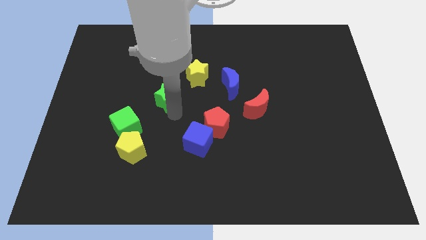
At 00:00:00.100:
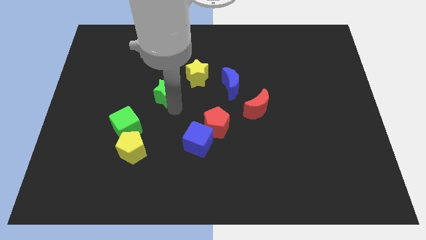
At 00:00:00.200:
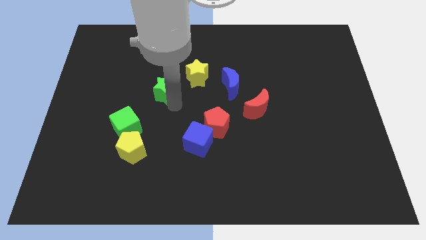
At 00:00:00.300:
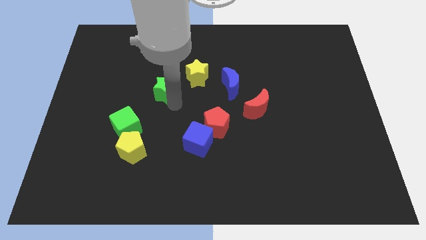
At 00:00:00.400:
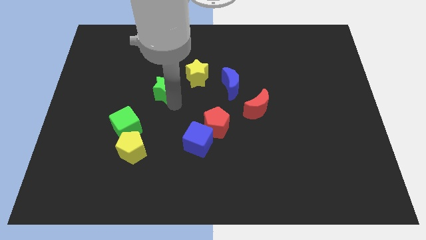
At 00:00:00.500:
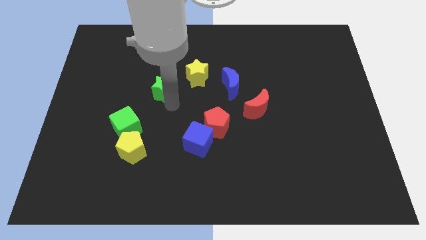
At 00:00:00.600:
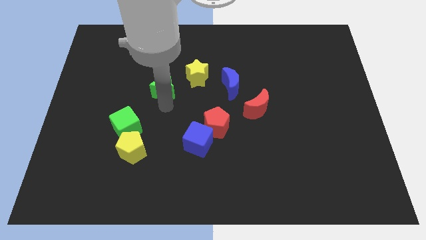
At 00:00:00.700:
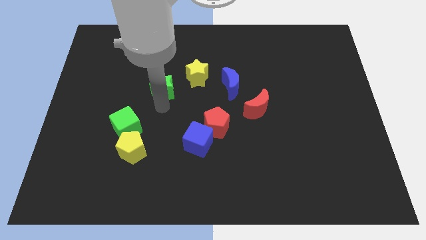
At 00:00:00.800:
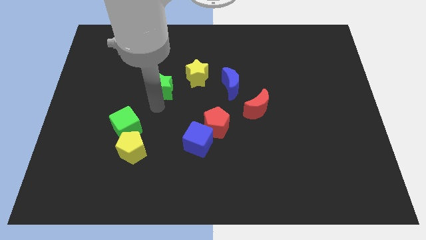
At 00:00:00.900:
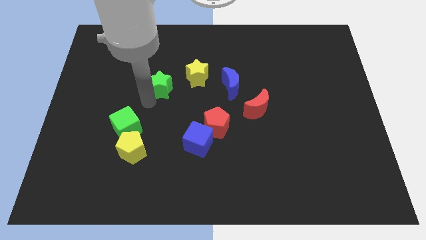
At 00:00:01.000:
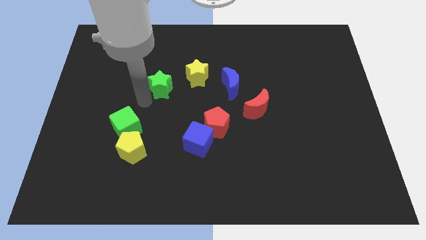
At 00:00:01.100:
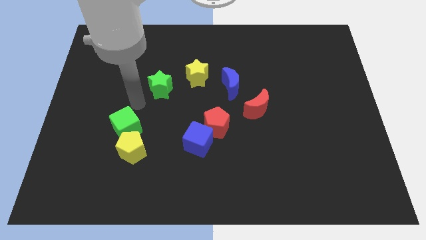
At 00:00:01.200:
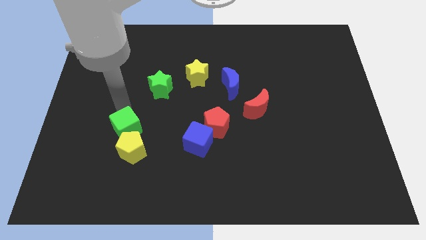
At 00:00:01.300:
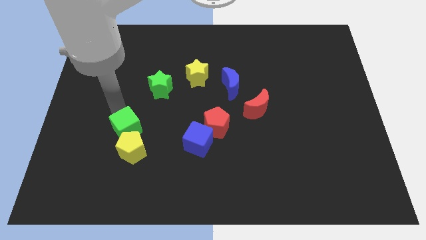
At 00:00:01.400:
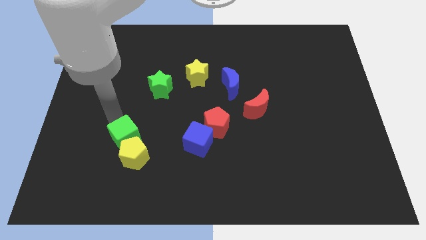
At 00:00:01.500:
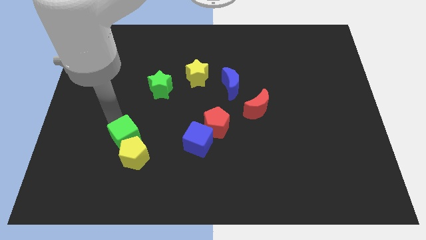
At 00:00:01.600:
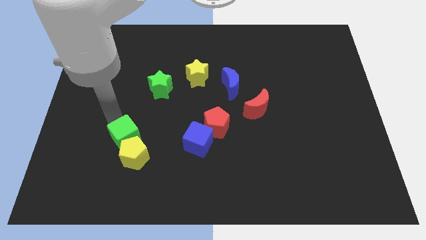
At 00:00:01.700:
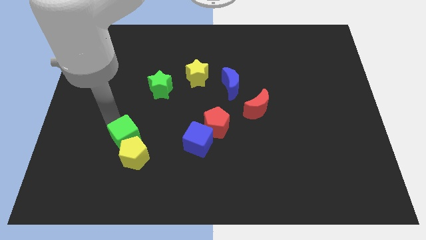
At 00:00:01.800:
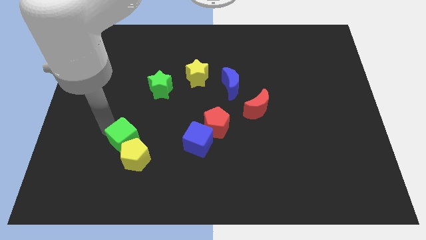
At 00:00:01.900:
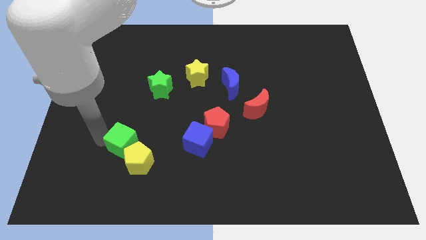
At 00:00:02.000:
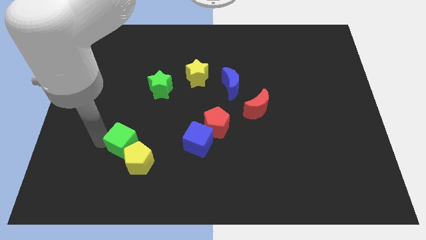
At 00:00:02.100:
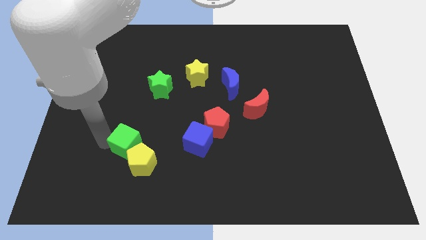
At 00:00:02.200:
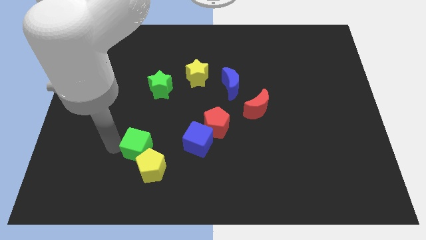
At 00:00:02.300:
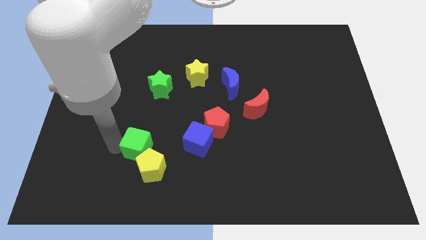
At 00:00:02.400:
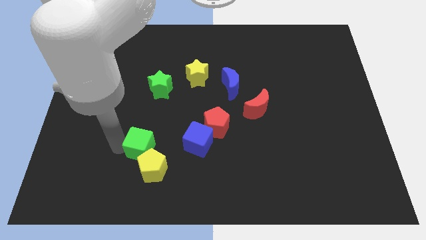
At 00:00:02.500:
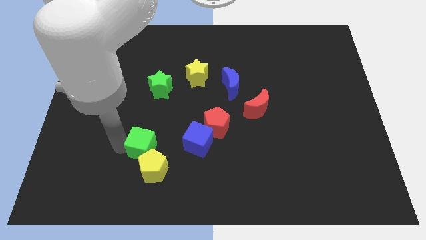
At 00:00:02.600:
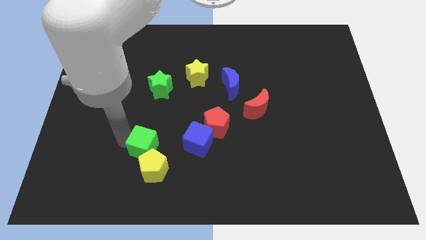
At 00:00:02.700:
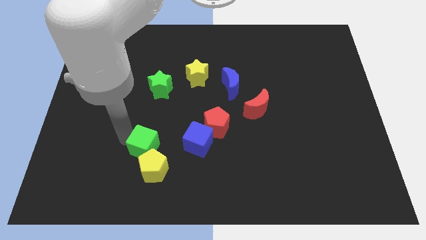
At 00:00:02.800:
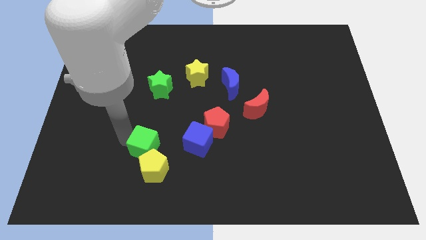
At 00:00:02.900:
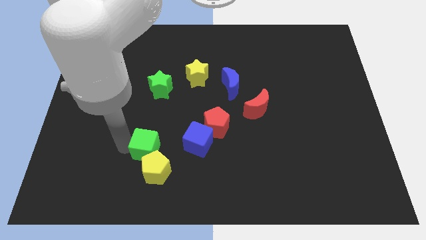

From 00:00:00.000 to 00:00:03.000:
push the green cube and yellow pentagon towards the bottom center of the board

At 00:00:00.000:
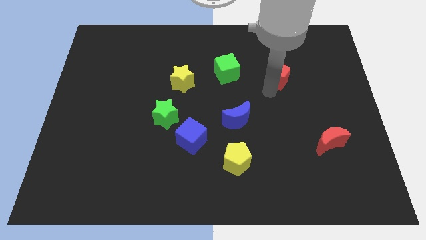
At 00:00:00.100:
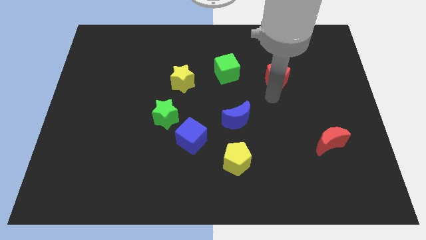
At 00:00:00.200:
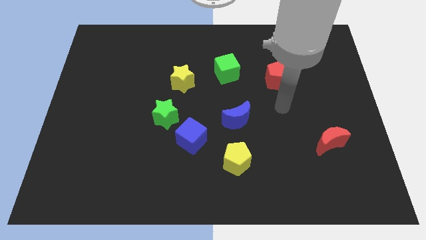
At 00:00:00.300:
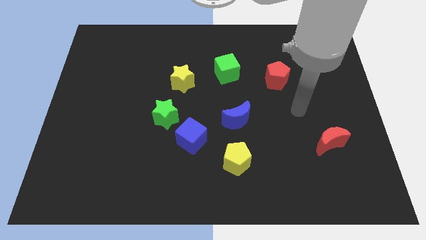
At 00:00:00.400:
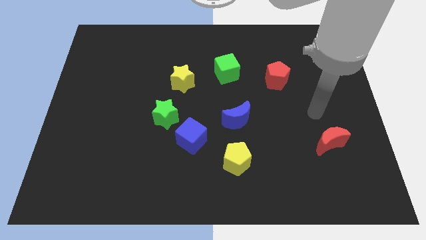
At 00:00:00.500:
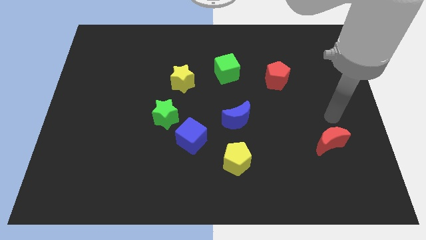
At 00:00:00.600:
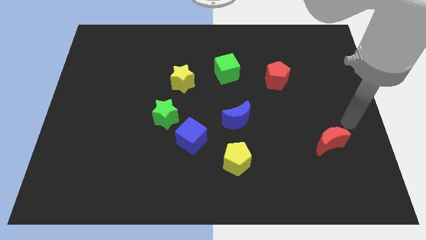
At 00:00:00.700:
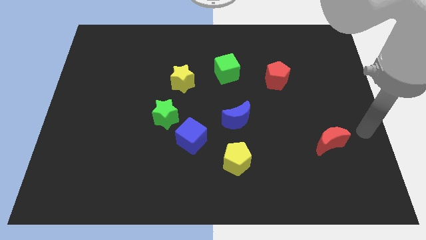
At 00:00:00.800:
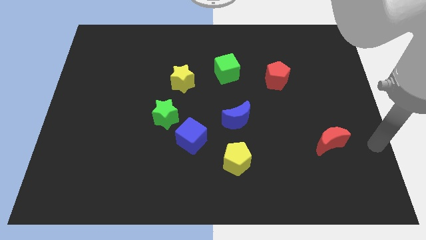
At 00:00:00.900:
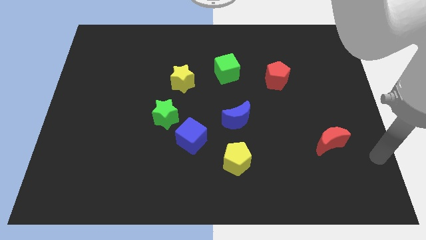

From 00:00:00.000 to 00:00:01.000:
move the arm to the right side of the red moon

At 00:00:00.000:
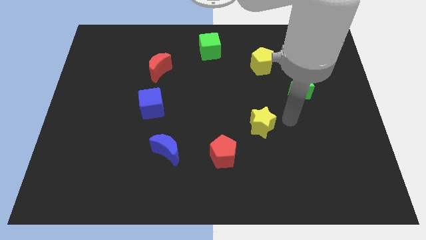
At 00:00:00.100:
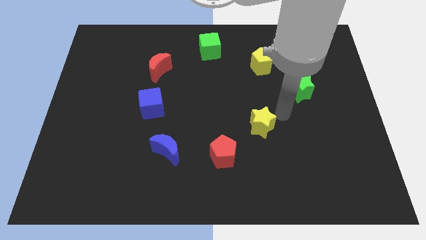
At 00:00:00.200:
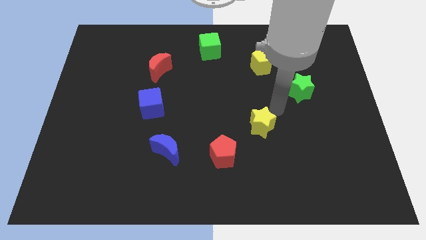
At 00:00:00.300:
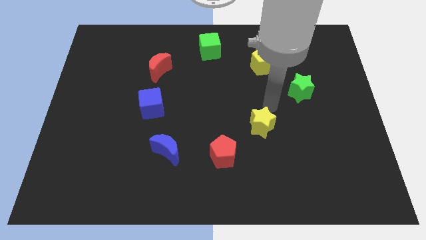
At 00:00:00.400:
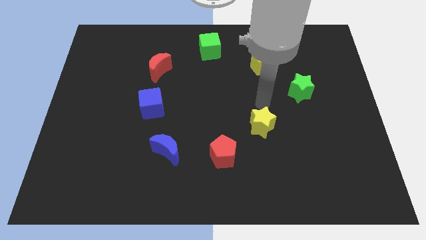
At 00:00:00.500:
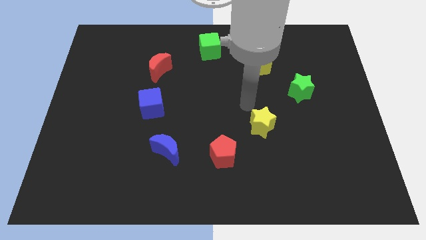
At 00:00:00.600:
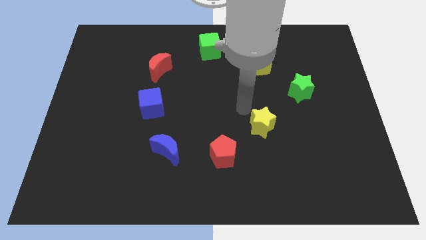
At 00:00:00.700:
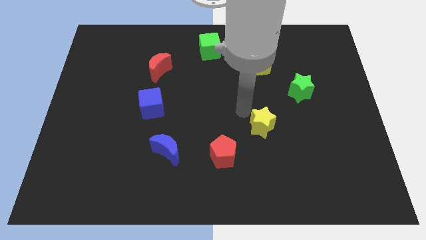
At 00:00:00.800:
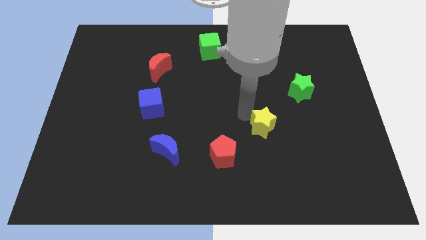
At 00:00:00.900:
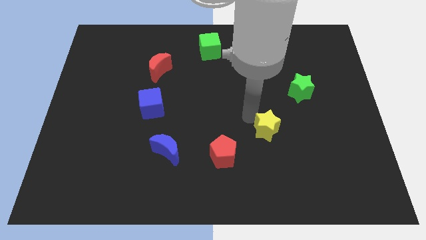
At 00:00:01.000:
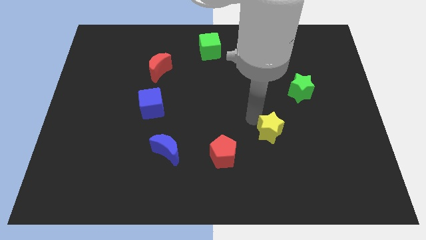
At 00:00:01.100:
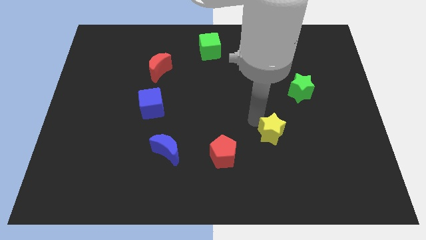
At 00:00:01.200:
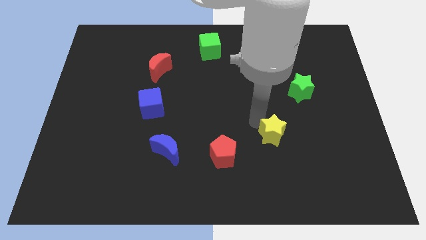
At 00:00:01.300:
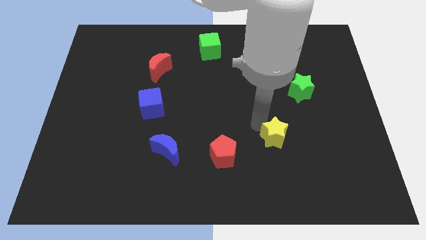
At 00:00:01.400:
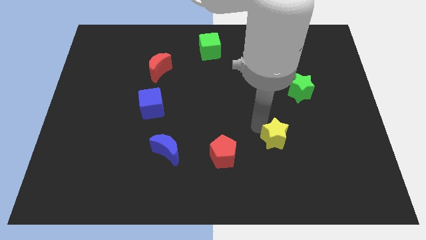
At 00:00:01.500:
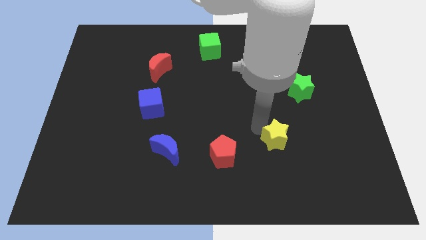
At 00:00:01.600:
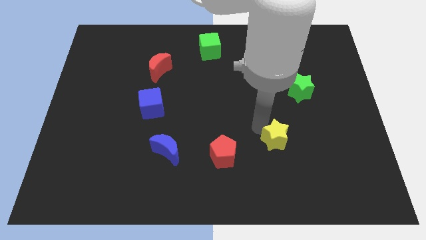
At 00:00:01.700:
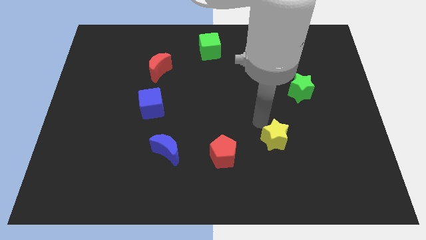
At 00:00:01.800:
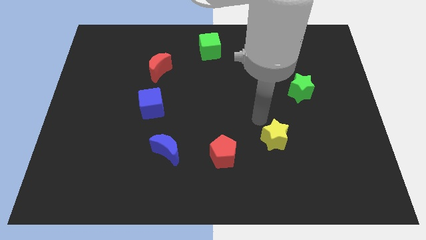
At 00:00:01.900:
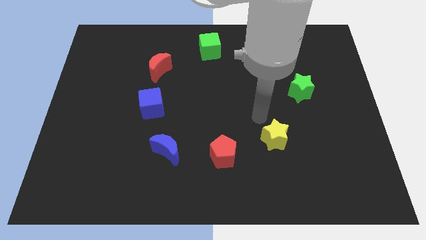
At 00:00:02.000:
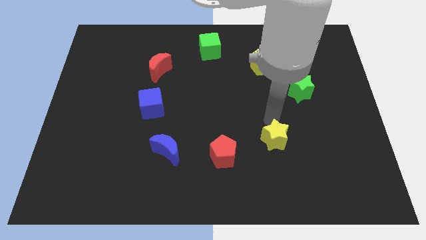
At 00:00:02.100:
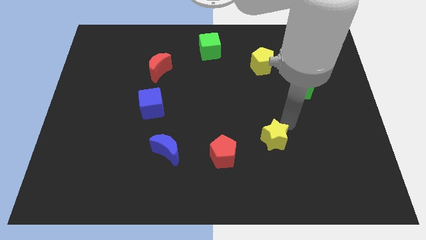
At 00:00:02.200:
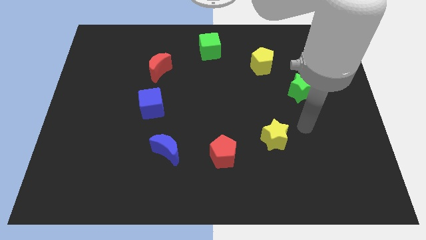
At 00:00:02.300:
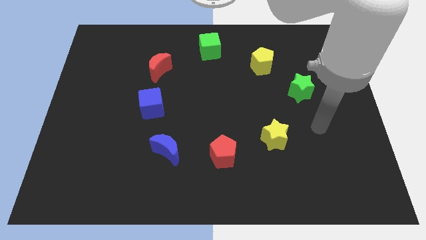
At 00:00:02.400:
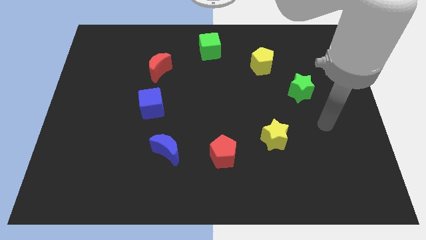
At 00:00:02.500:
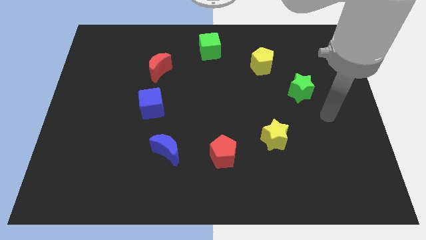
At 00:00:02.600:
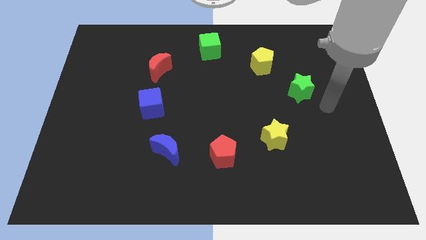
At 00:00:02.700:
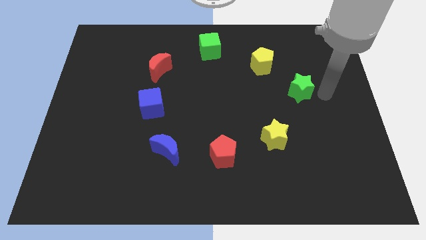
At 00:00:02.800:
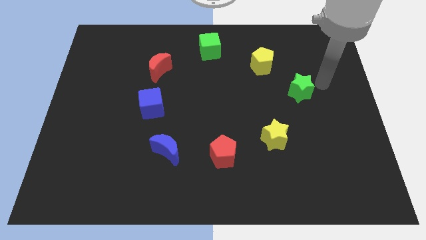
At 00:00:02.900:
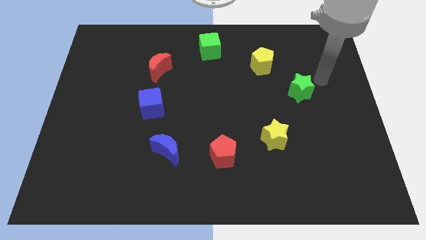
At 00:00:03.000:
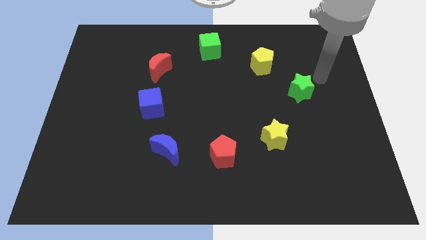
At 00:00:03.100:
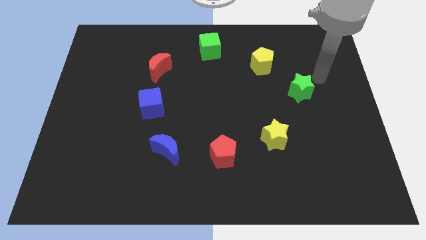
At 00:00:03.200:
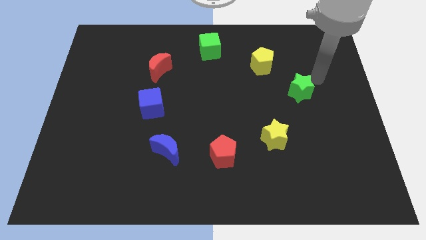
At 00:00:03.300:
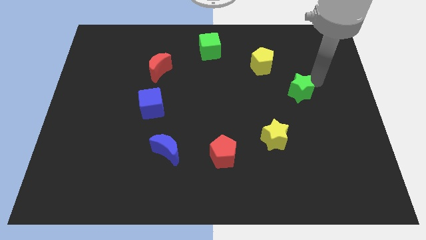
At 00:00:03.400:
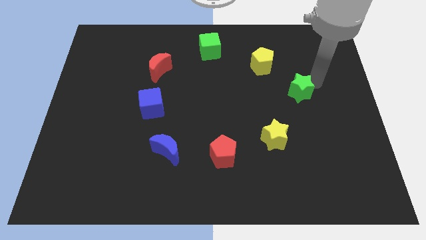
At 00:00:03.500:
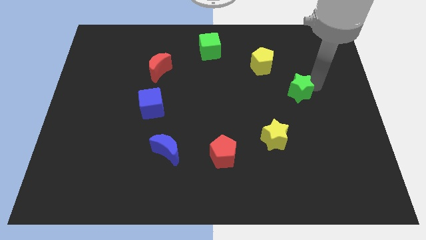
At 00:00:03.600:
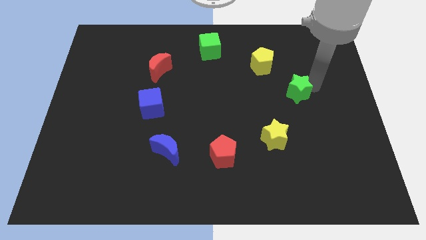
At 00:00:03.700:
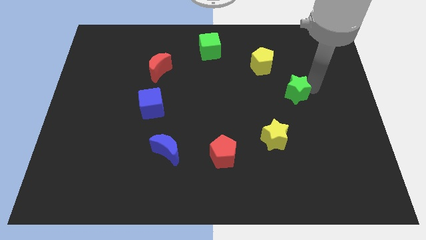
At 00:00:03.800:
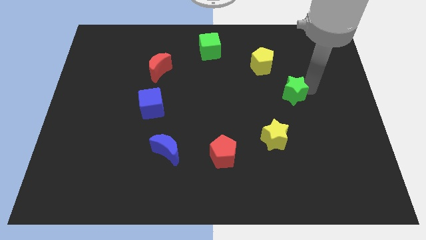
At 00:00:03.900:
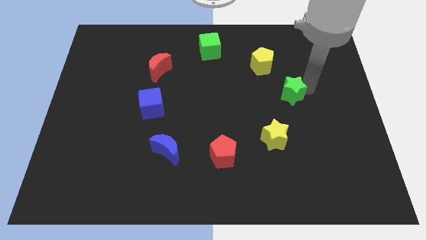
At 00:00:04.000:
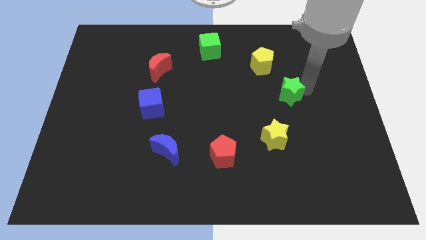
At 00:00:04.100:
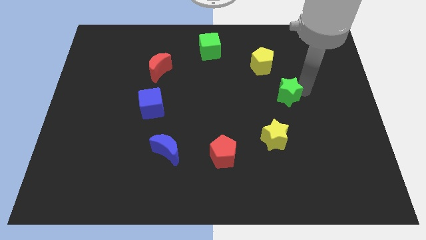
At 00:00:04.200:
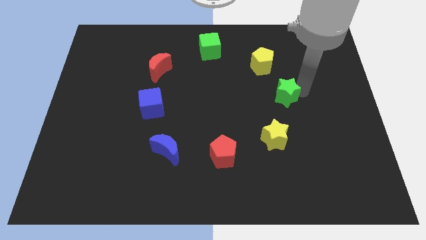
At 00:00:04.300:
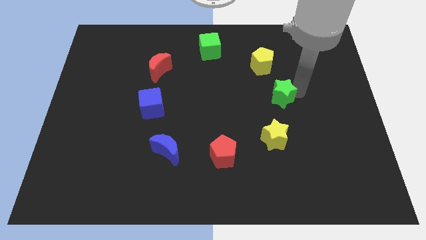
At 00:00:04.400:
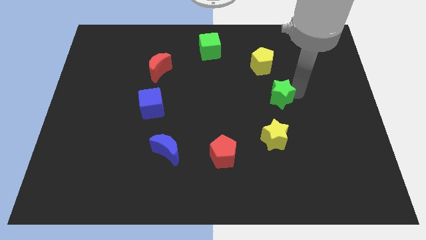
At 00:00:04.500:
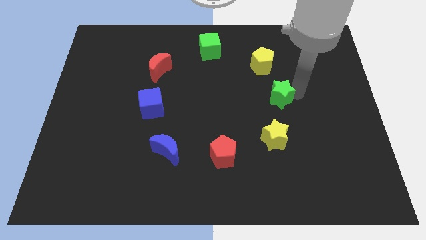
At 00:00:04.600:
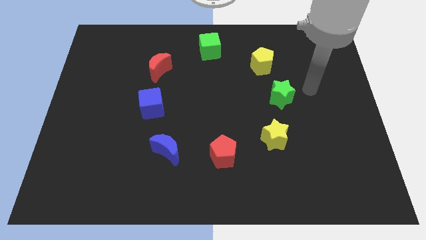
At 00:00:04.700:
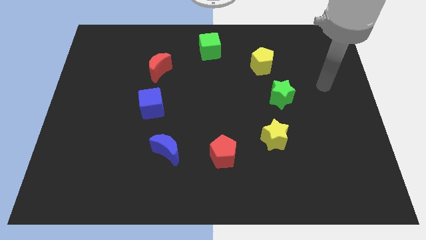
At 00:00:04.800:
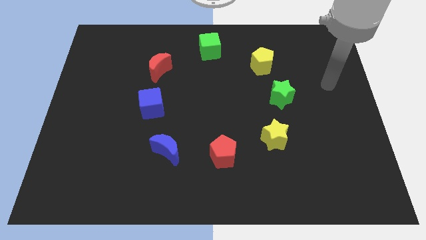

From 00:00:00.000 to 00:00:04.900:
place the yellow star to the right side of the red pentagon
